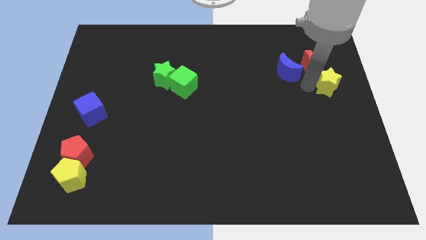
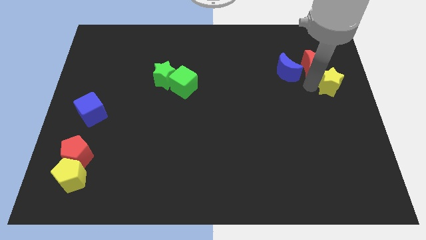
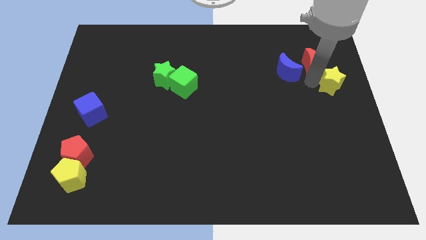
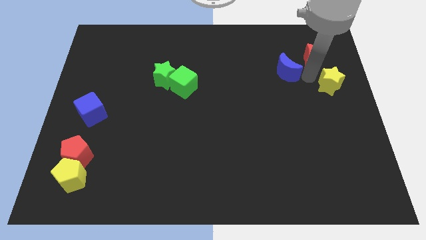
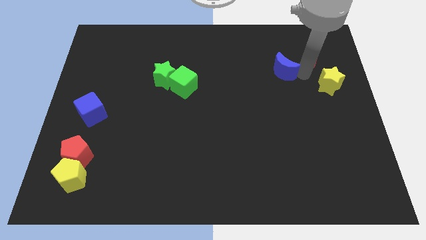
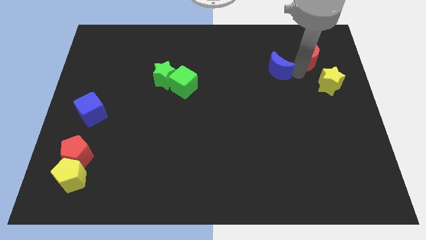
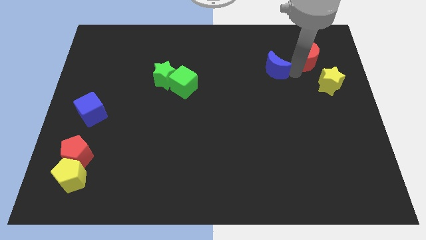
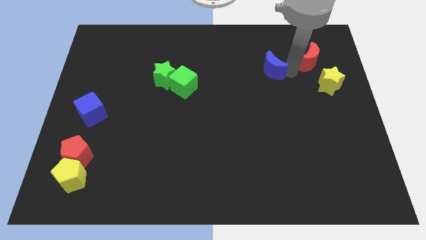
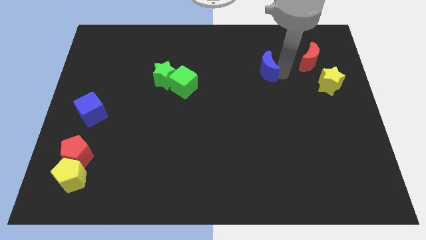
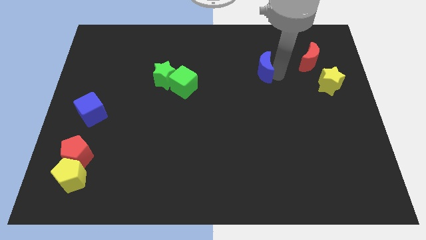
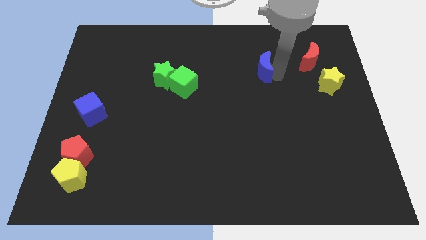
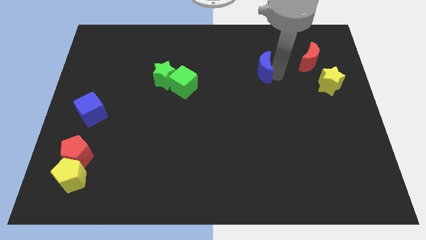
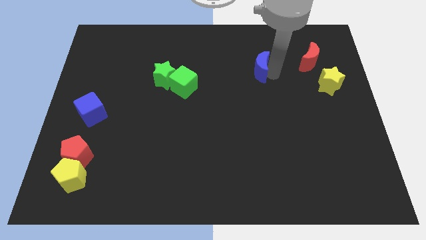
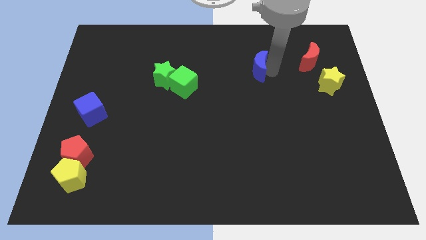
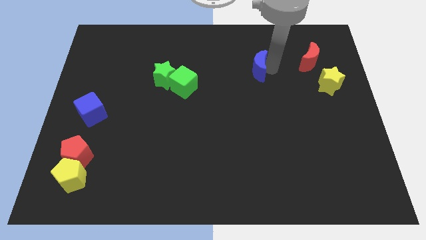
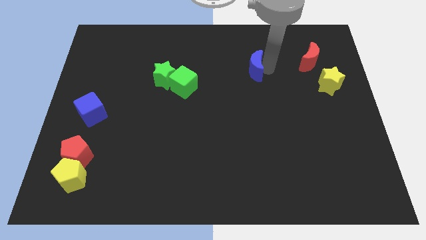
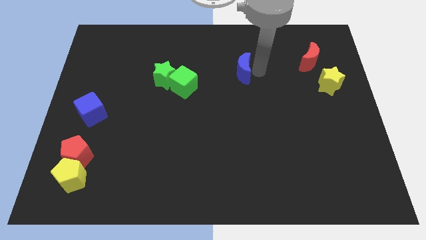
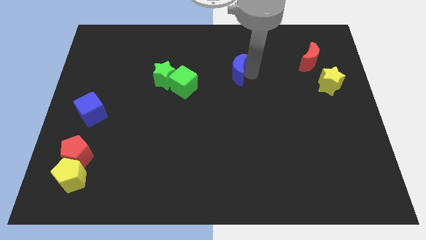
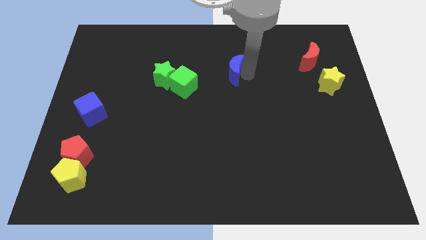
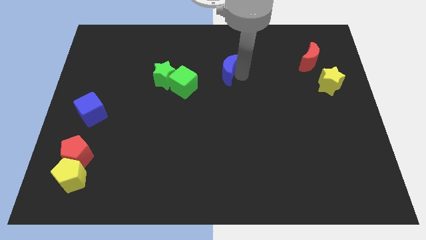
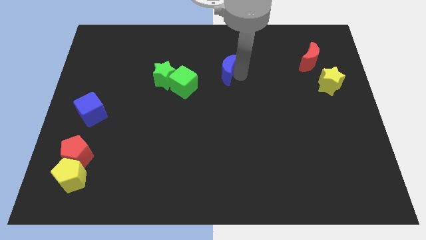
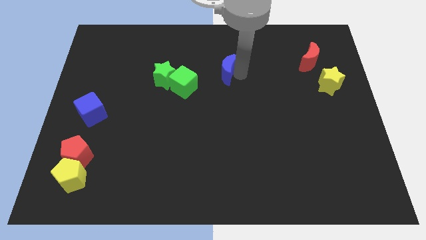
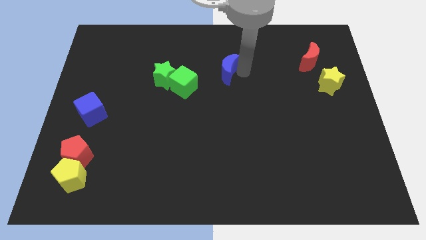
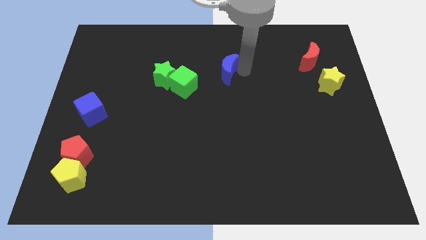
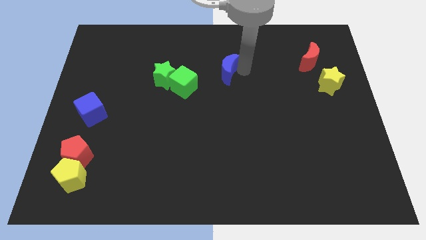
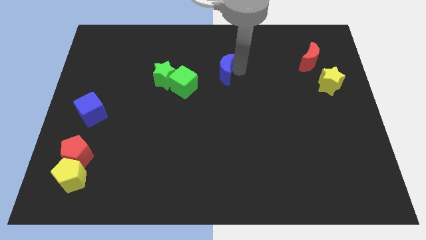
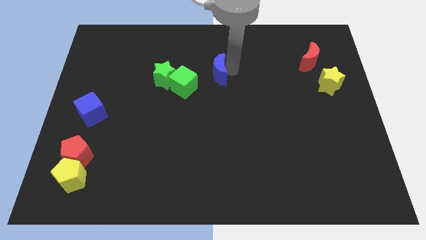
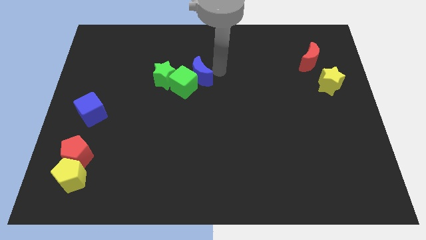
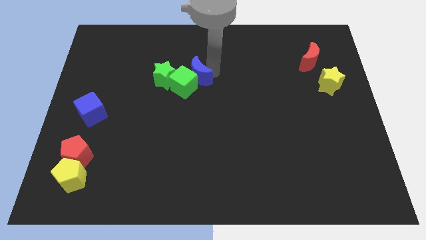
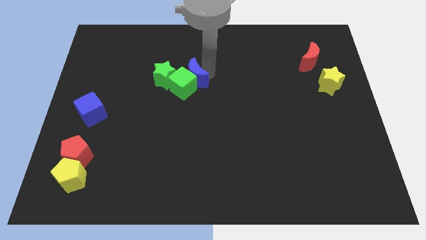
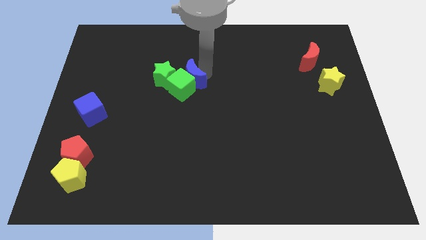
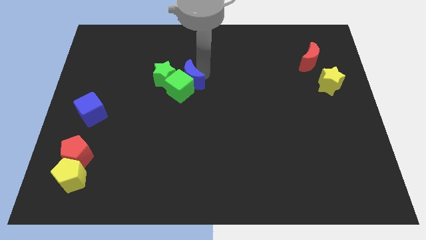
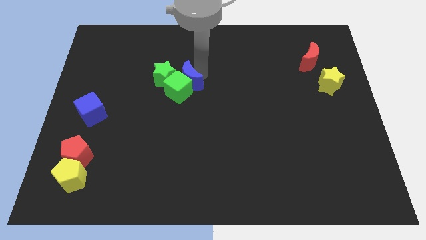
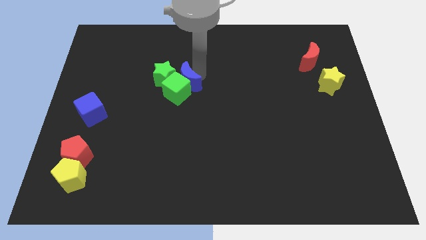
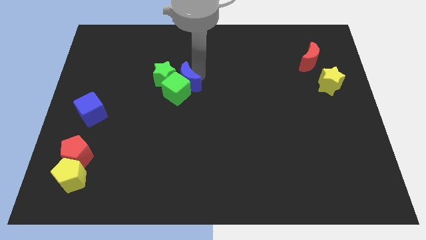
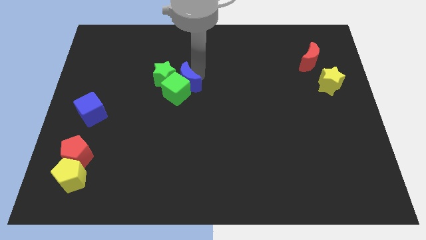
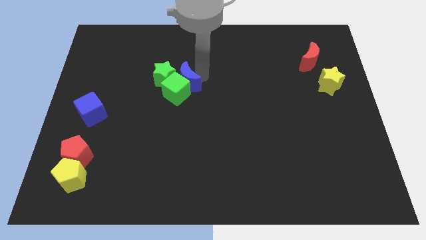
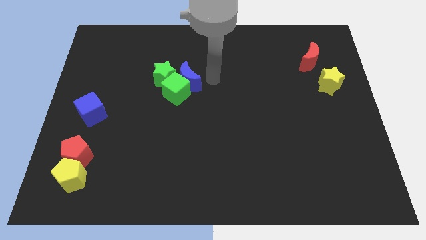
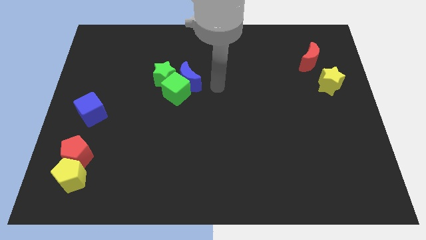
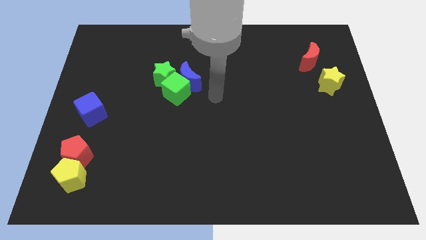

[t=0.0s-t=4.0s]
place the blue crescent to the right of green cube

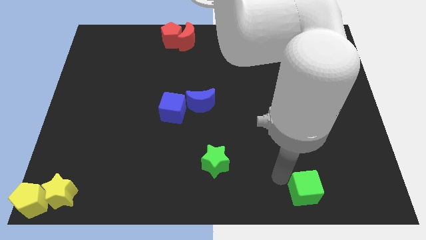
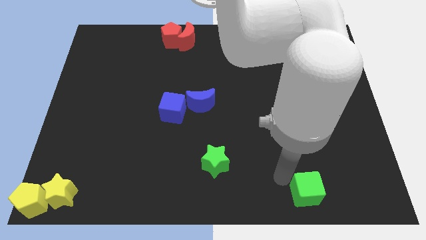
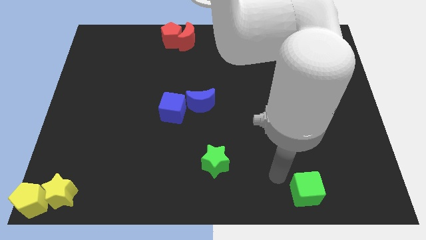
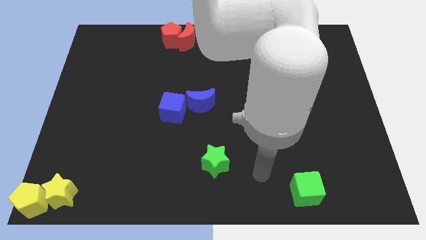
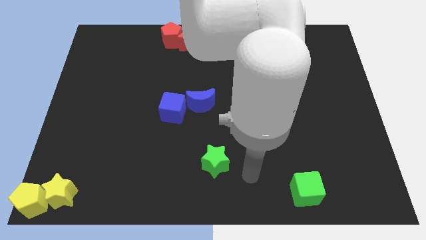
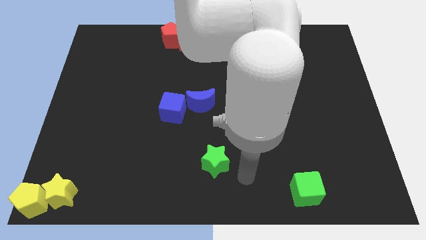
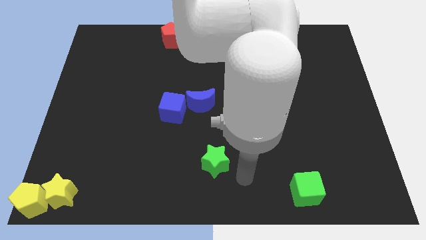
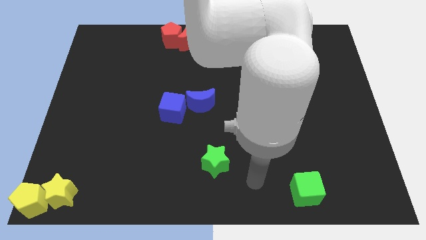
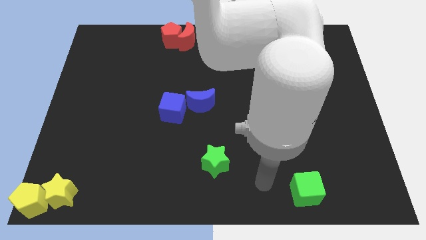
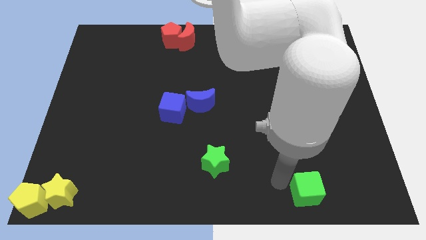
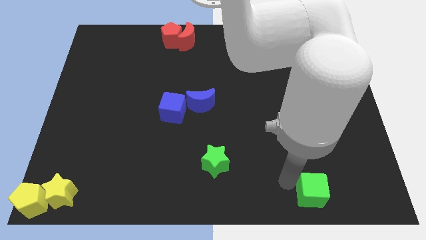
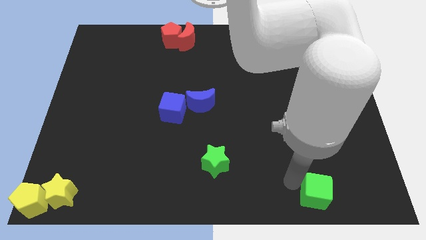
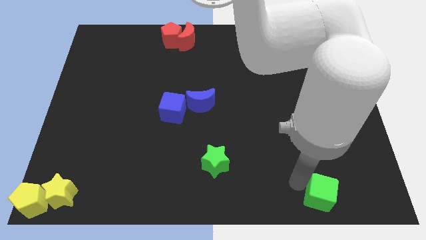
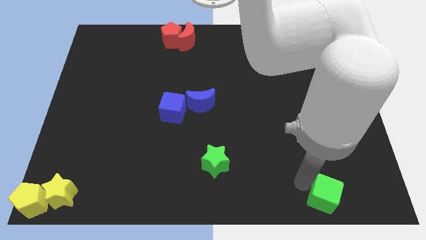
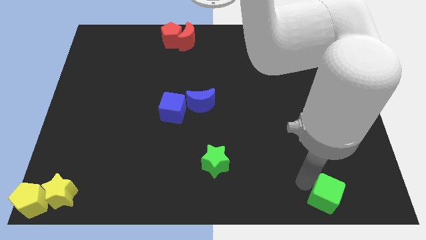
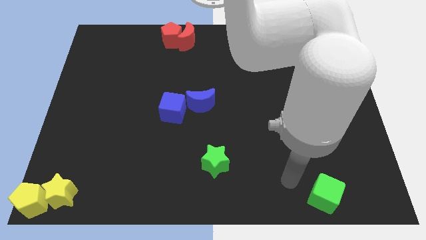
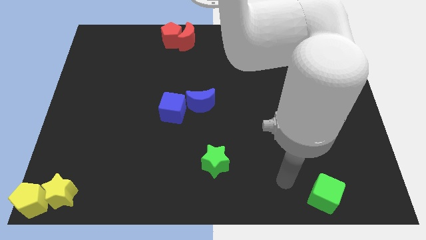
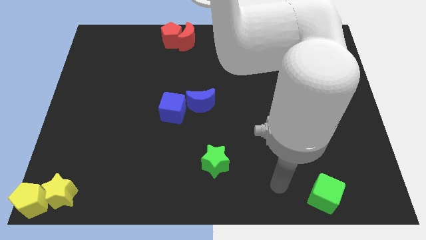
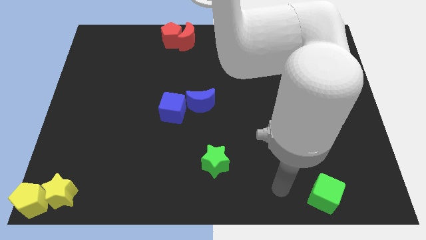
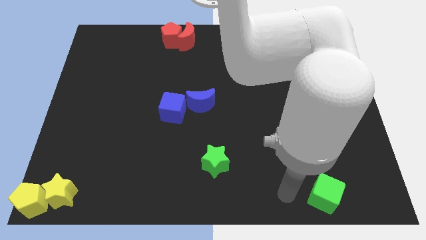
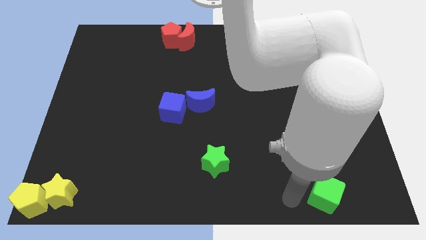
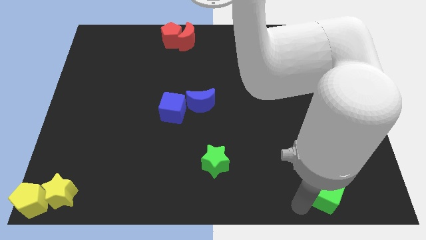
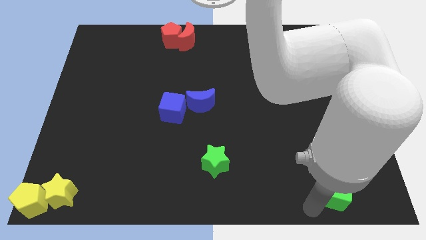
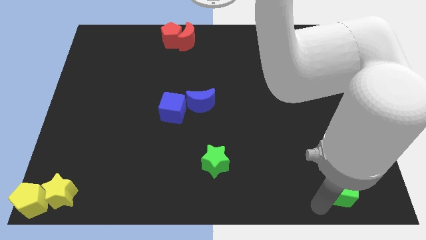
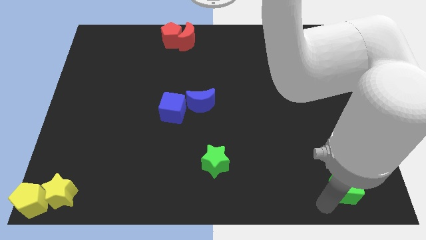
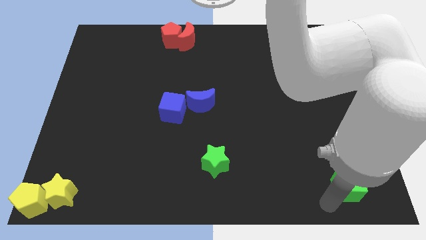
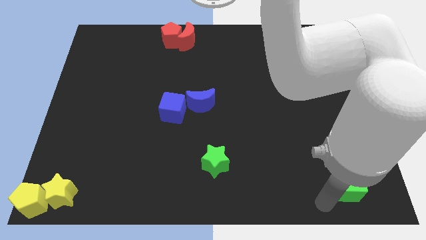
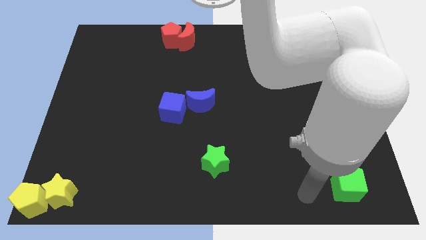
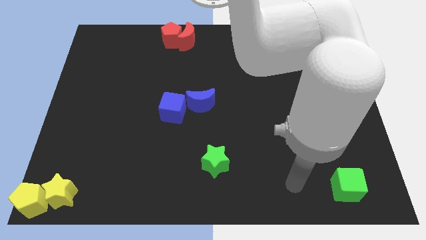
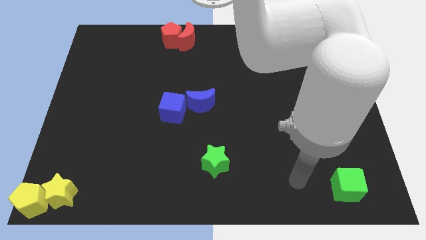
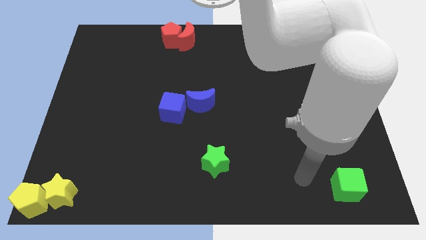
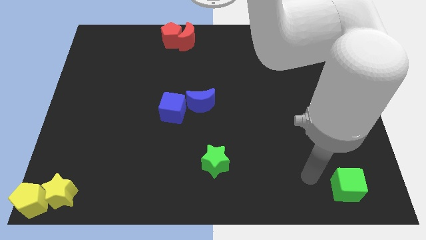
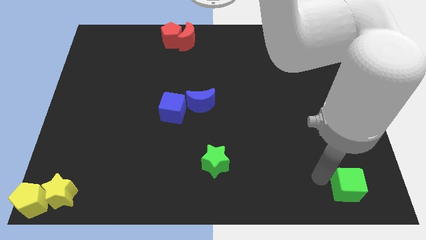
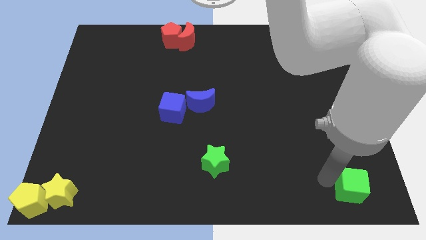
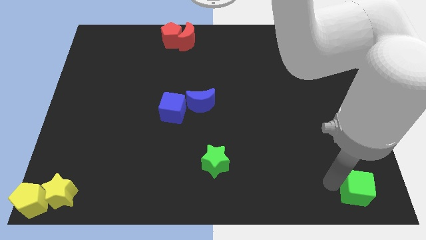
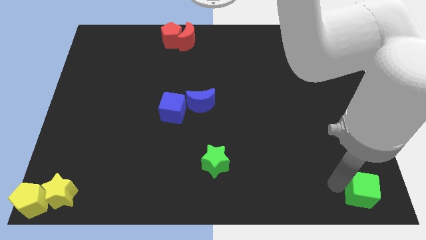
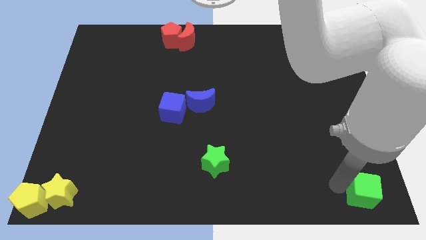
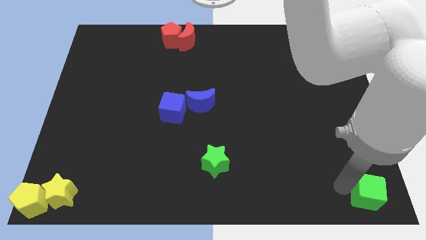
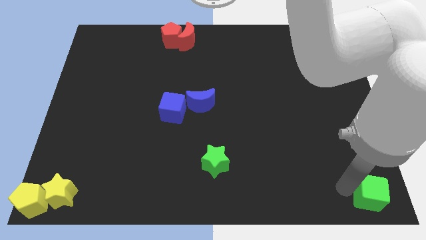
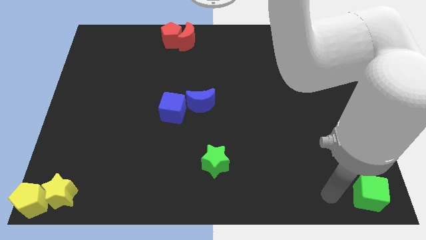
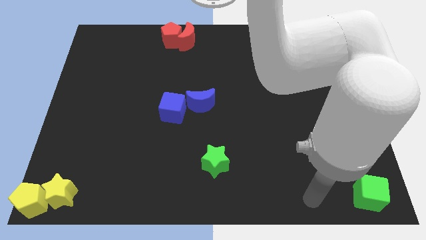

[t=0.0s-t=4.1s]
place the green cube to the bottom right corner

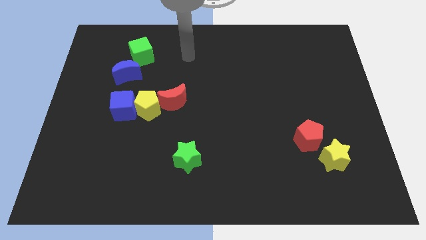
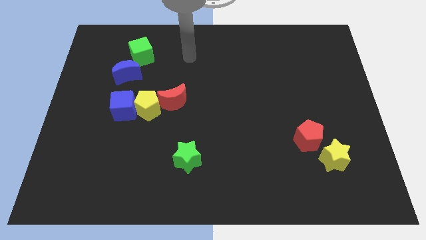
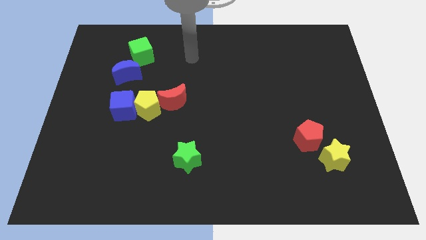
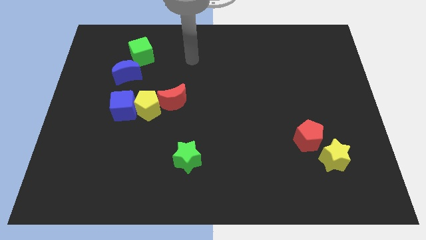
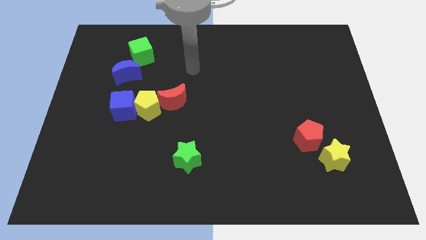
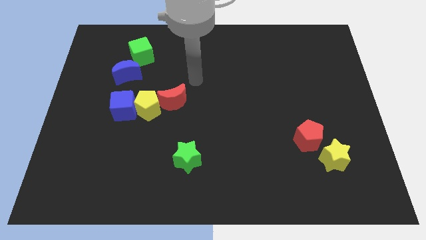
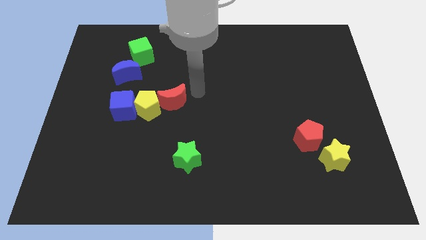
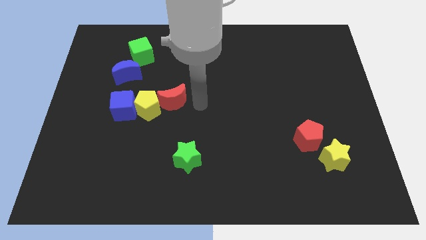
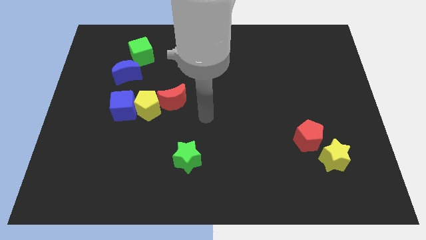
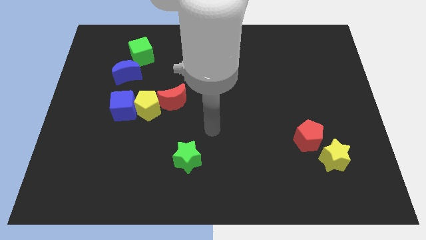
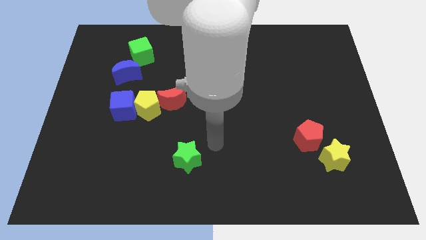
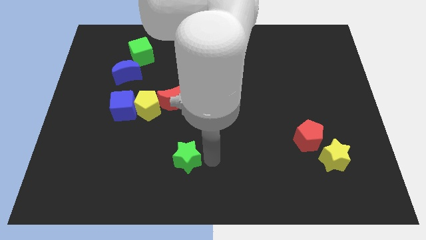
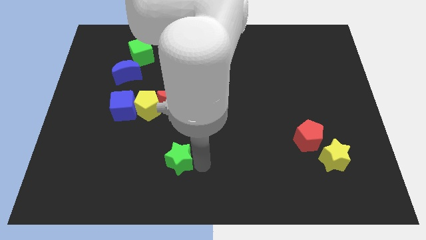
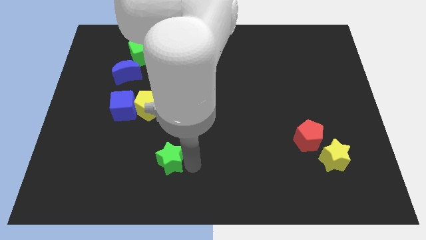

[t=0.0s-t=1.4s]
move your arm at the right side of the green star
